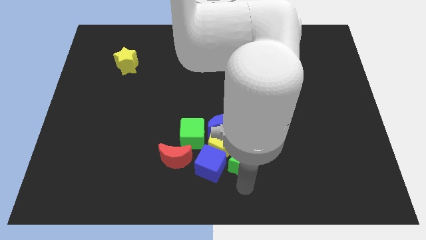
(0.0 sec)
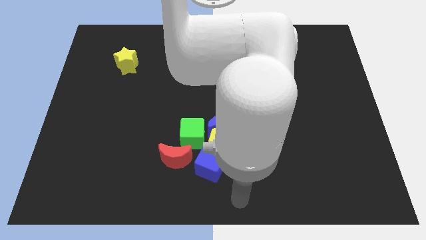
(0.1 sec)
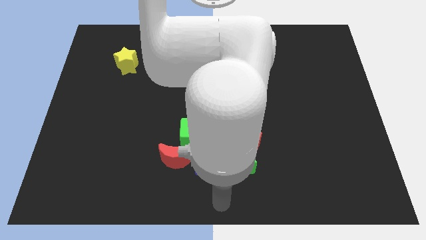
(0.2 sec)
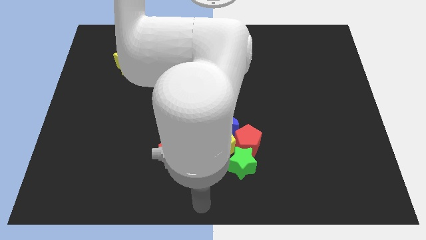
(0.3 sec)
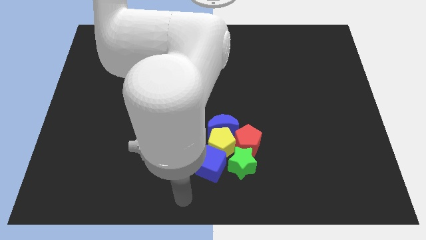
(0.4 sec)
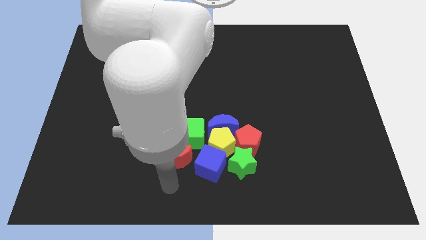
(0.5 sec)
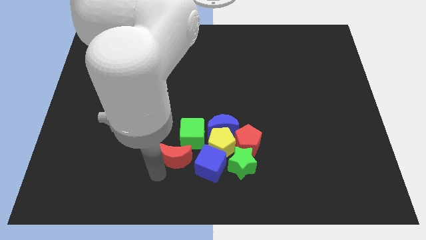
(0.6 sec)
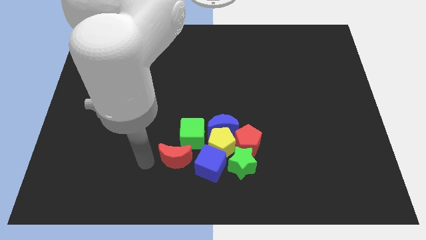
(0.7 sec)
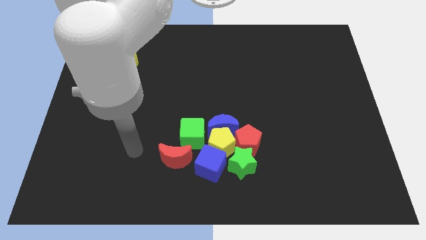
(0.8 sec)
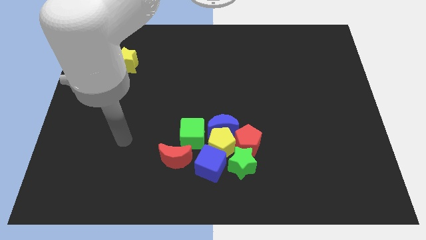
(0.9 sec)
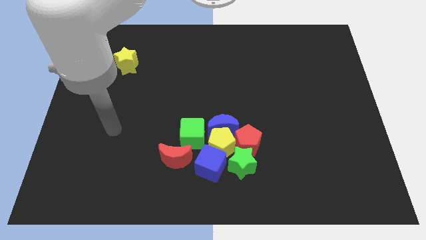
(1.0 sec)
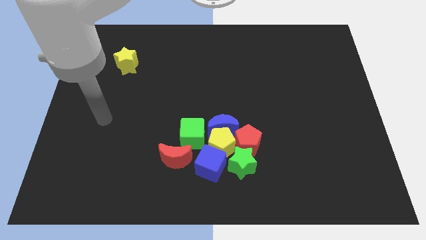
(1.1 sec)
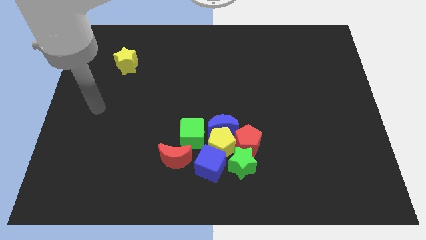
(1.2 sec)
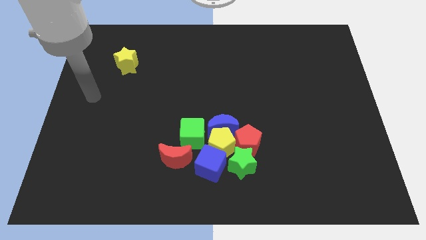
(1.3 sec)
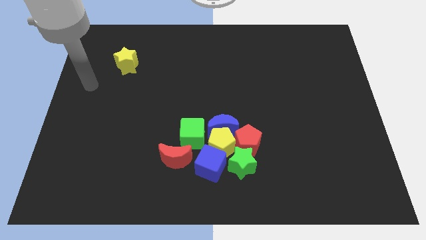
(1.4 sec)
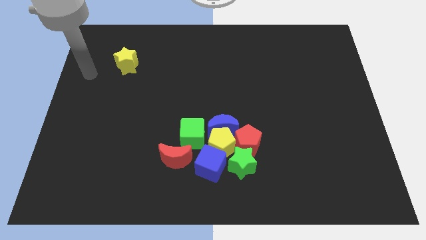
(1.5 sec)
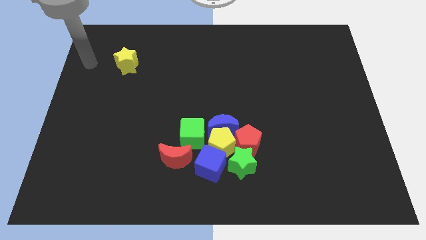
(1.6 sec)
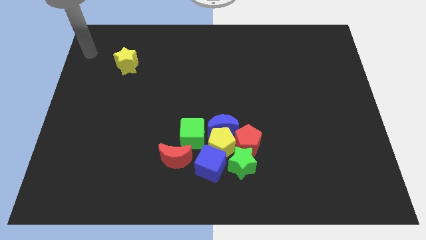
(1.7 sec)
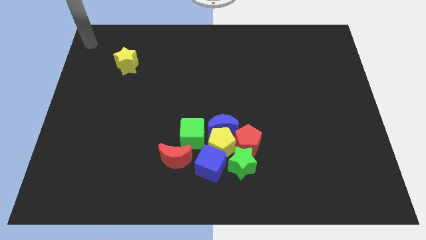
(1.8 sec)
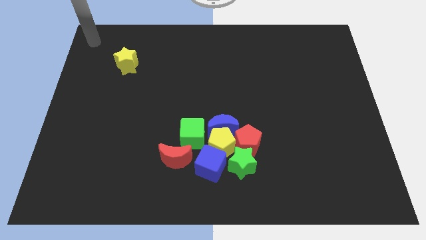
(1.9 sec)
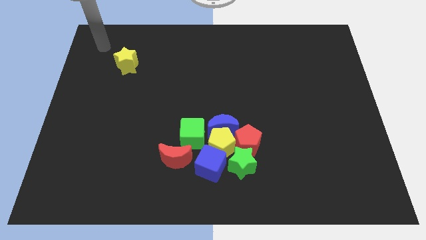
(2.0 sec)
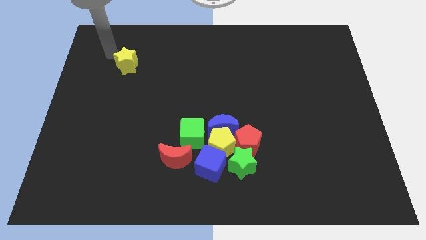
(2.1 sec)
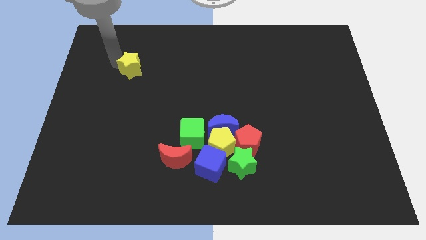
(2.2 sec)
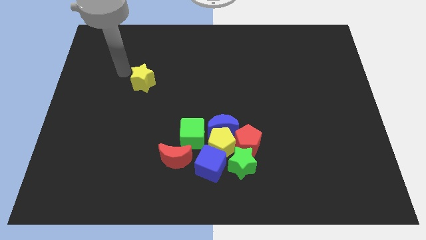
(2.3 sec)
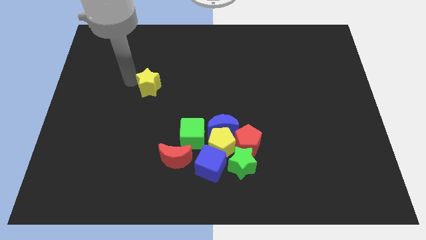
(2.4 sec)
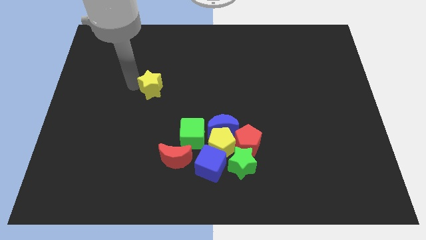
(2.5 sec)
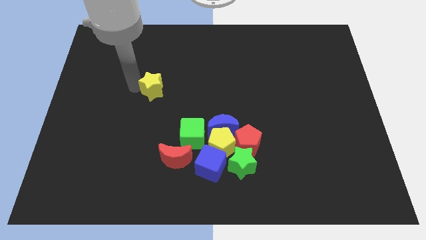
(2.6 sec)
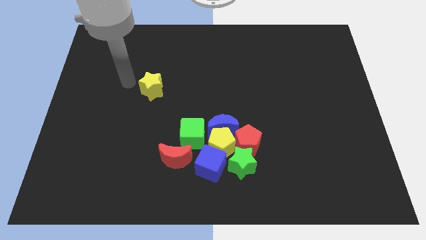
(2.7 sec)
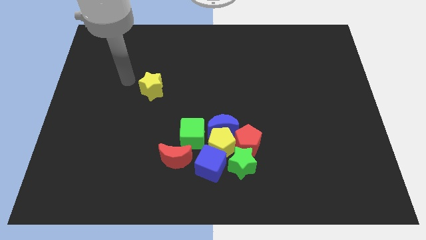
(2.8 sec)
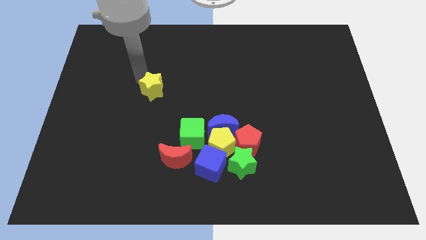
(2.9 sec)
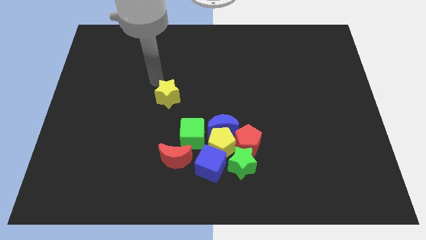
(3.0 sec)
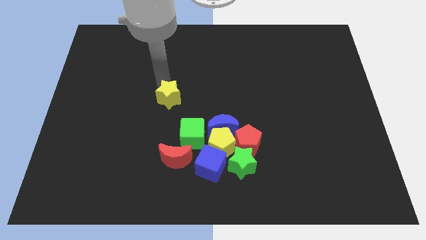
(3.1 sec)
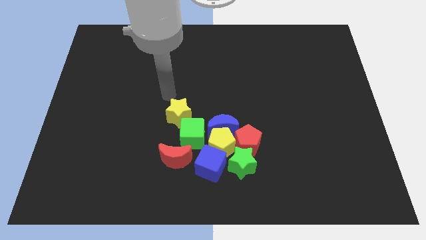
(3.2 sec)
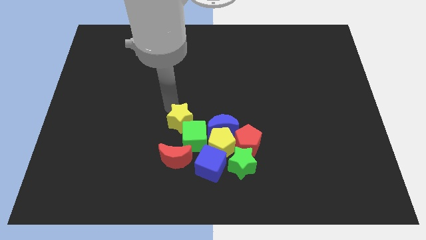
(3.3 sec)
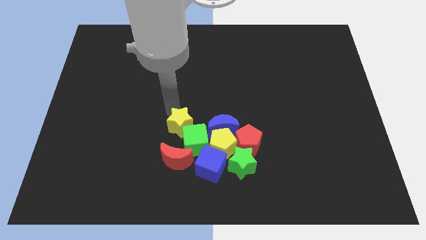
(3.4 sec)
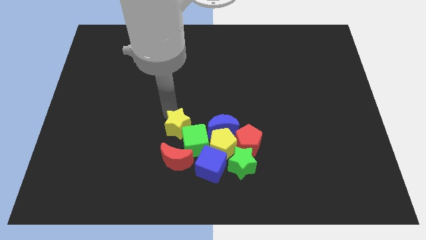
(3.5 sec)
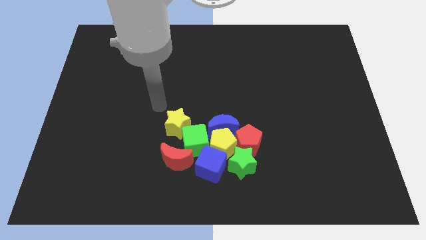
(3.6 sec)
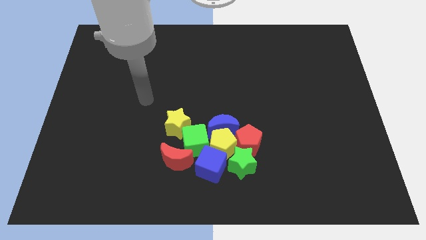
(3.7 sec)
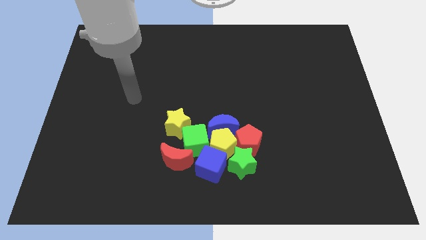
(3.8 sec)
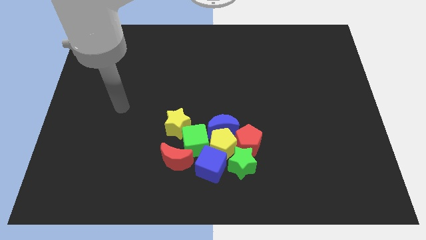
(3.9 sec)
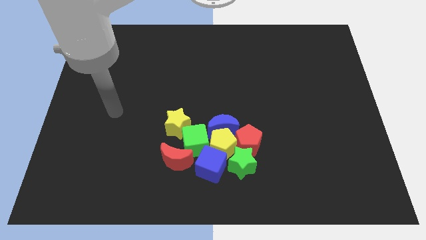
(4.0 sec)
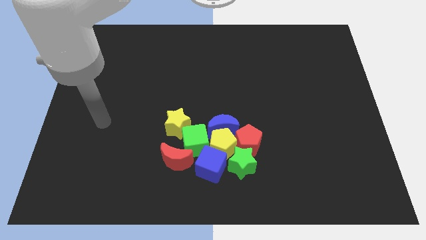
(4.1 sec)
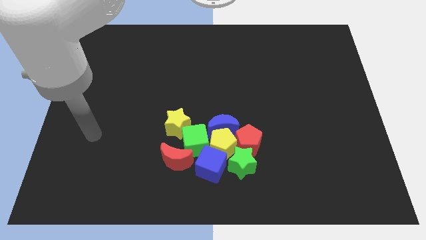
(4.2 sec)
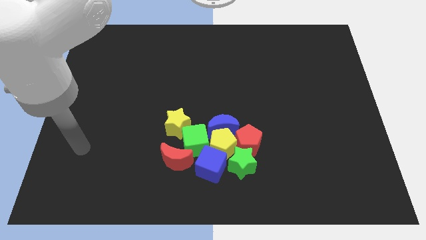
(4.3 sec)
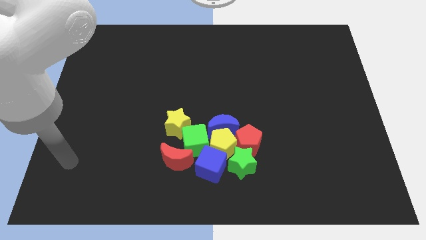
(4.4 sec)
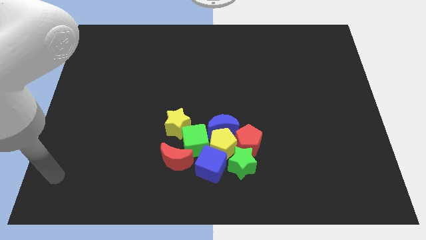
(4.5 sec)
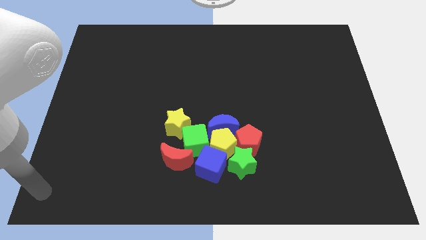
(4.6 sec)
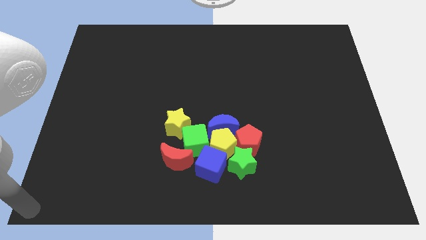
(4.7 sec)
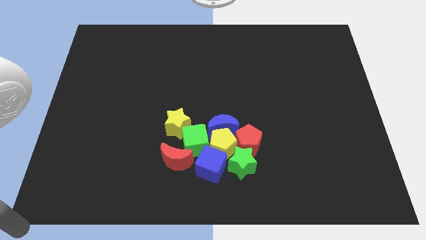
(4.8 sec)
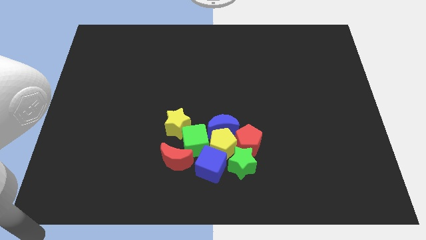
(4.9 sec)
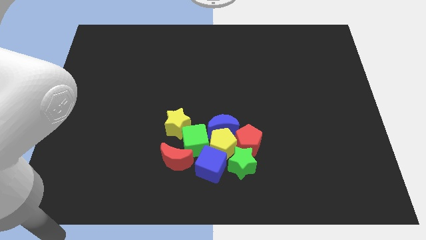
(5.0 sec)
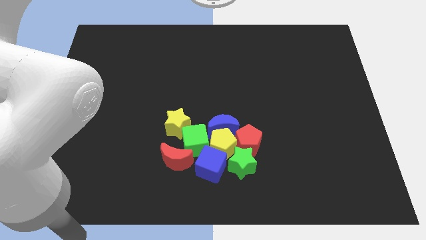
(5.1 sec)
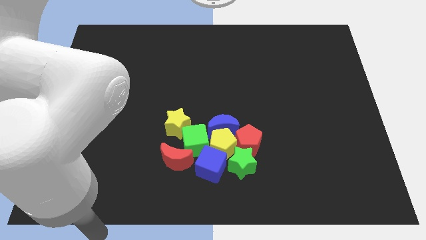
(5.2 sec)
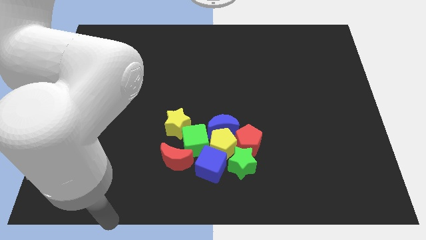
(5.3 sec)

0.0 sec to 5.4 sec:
move the yellow star towards the green cube

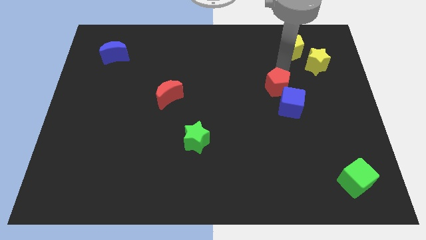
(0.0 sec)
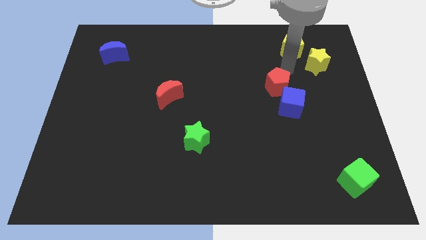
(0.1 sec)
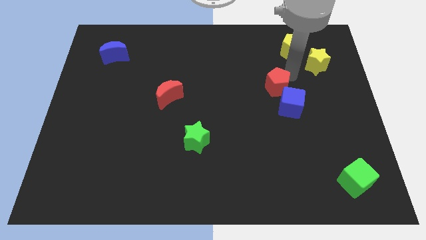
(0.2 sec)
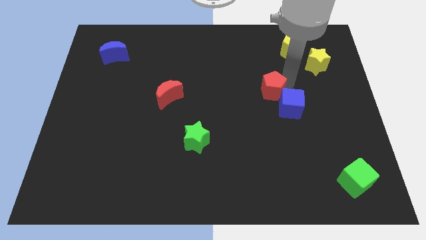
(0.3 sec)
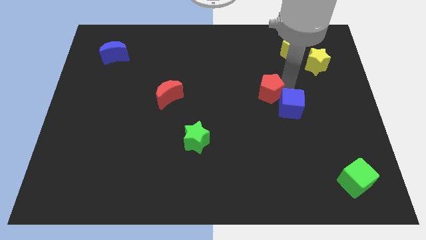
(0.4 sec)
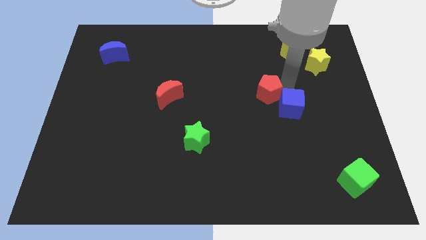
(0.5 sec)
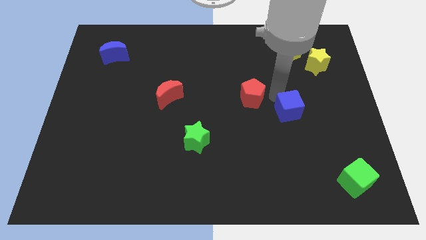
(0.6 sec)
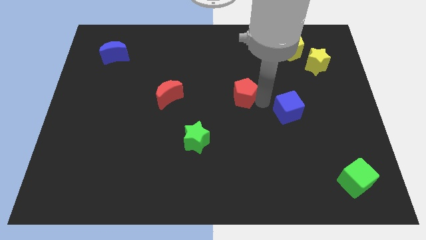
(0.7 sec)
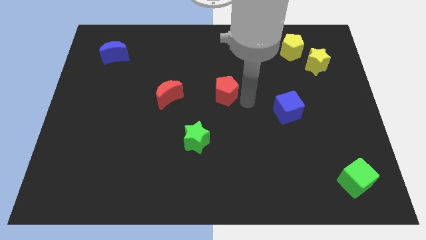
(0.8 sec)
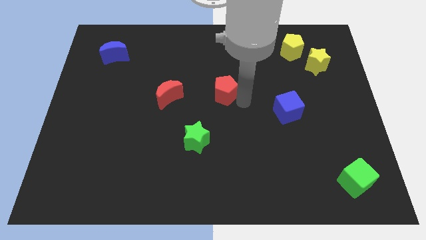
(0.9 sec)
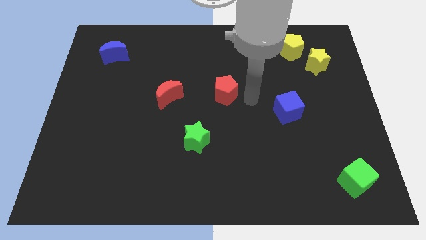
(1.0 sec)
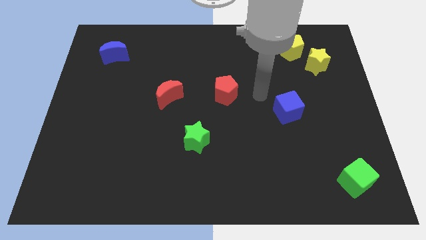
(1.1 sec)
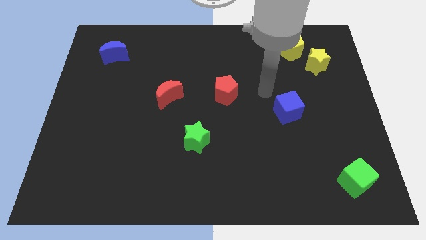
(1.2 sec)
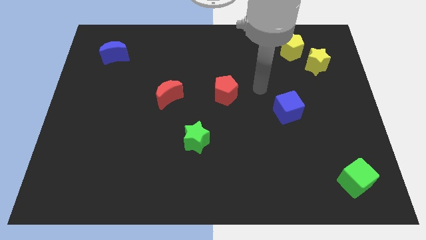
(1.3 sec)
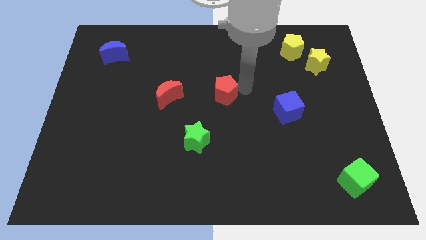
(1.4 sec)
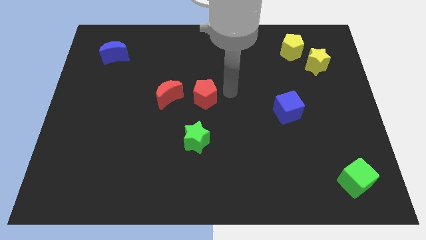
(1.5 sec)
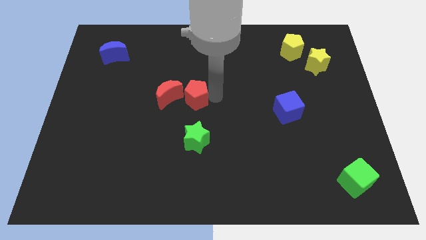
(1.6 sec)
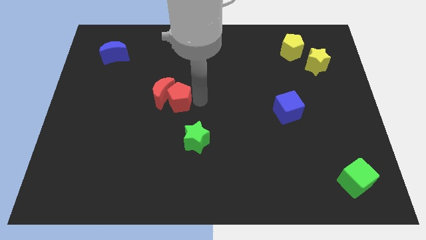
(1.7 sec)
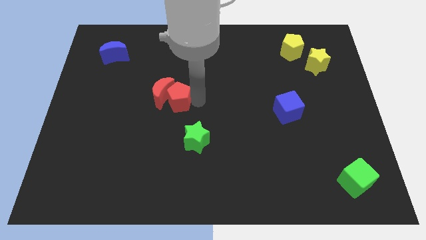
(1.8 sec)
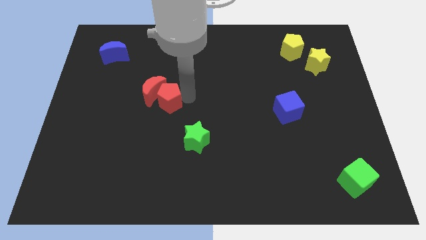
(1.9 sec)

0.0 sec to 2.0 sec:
push the red pentagon into red crescent

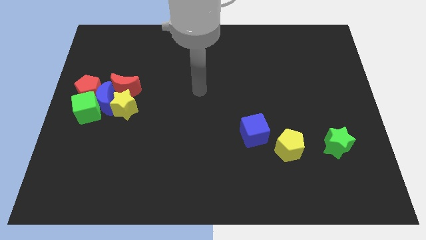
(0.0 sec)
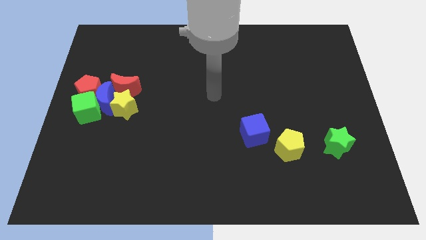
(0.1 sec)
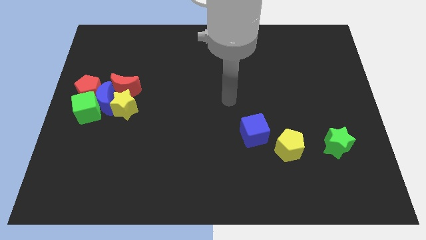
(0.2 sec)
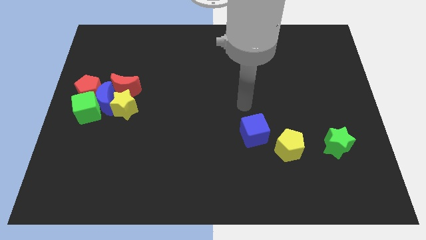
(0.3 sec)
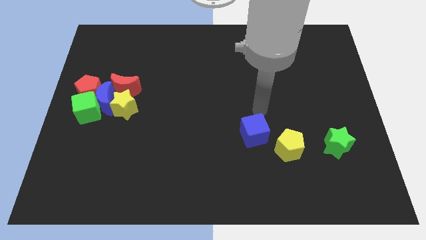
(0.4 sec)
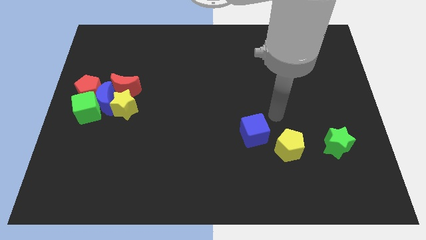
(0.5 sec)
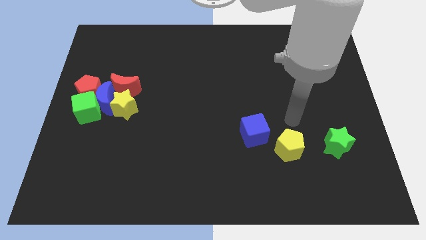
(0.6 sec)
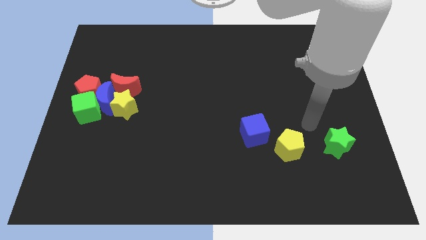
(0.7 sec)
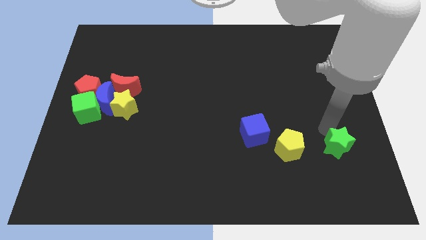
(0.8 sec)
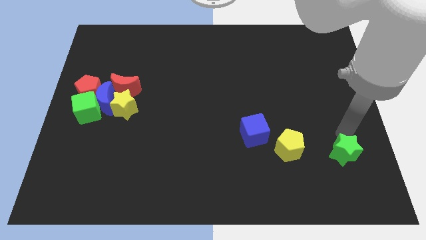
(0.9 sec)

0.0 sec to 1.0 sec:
place arm on the top of green star

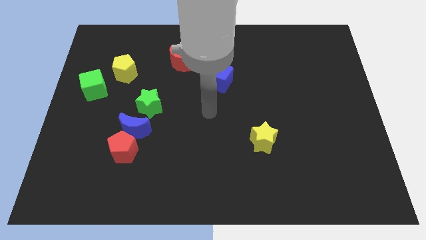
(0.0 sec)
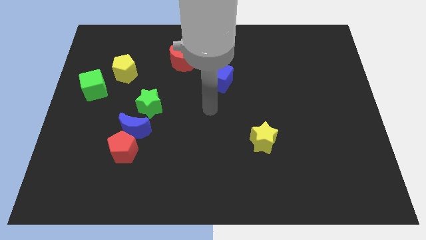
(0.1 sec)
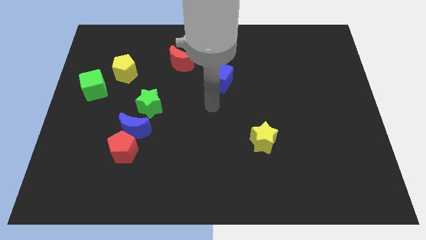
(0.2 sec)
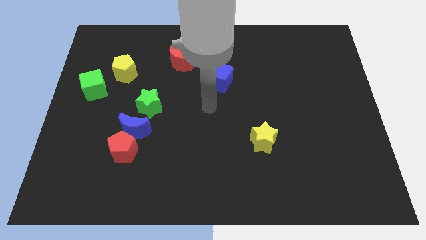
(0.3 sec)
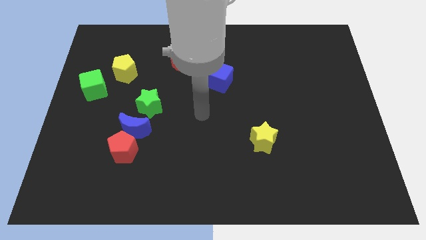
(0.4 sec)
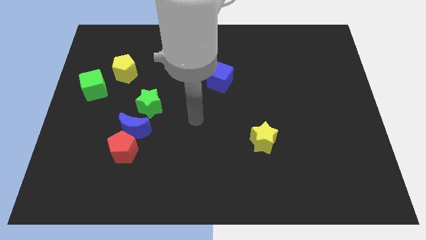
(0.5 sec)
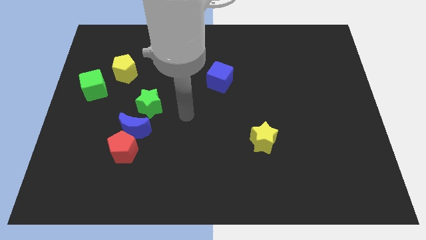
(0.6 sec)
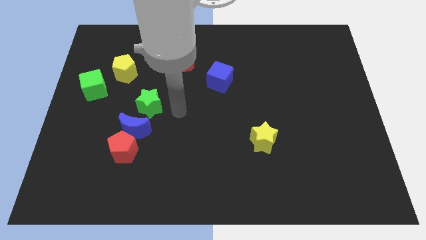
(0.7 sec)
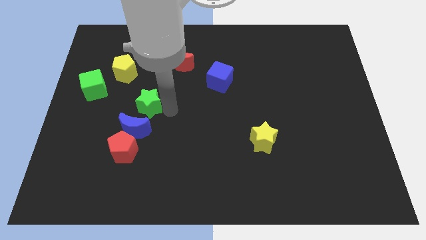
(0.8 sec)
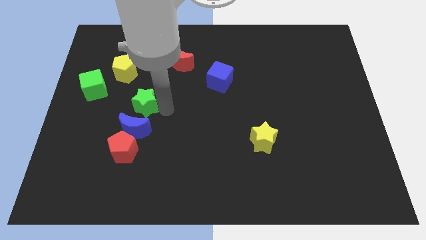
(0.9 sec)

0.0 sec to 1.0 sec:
touch the green star
